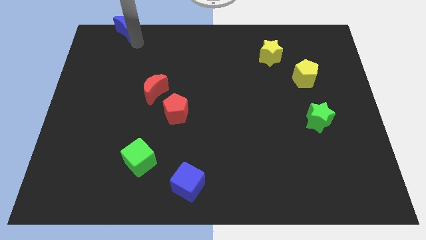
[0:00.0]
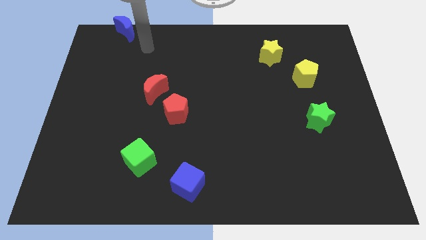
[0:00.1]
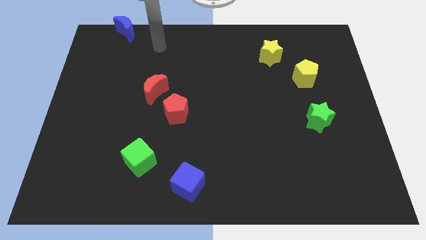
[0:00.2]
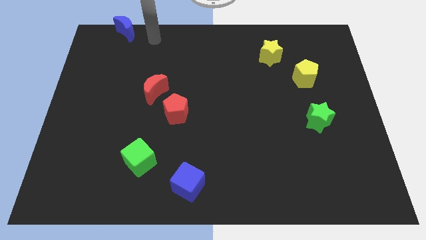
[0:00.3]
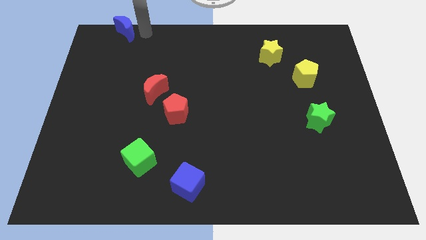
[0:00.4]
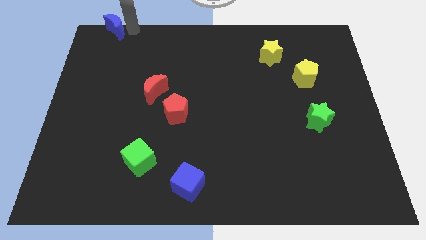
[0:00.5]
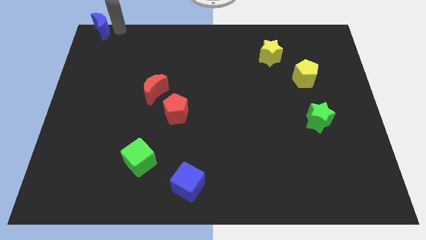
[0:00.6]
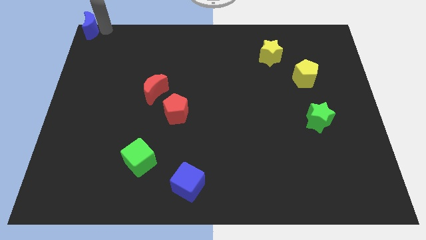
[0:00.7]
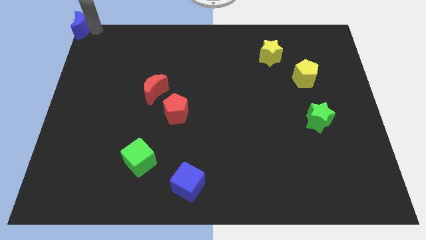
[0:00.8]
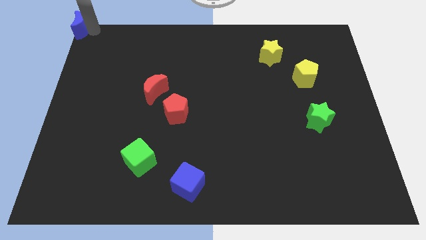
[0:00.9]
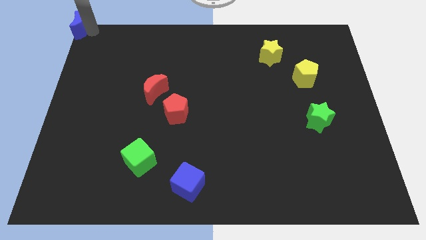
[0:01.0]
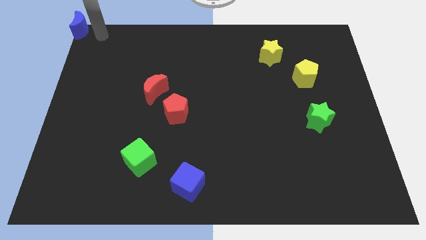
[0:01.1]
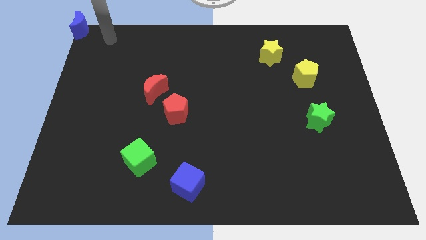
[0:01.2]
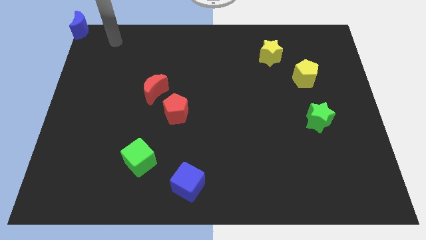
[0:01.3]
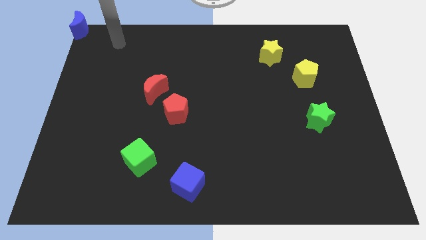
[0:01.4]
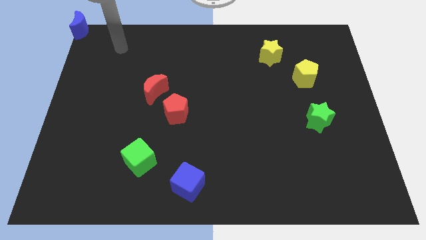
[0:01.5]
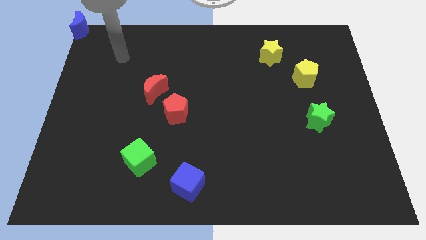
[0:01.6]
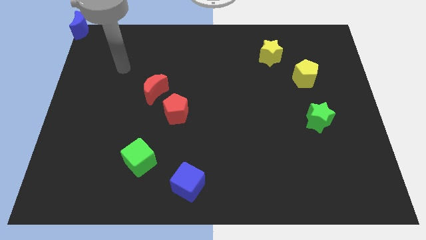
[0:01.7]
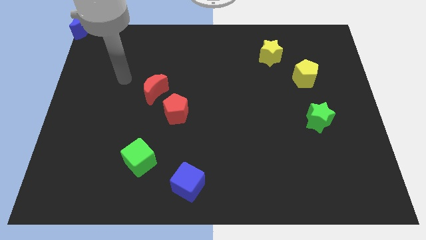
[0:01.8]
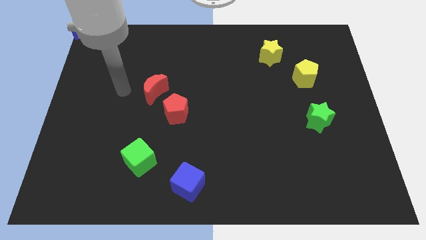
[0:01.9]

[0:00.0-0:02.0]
place blue moon to the top left corner of the board

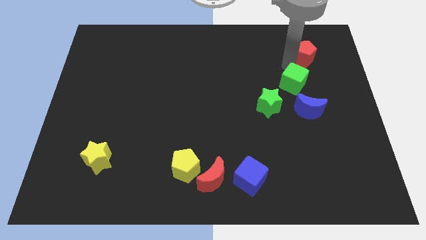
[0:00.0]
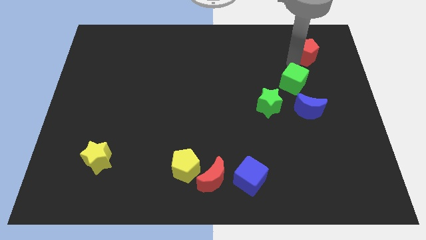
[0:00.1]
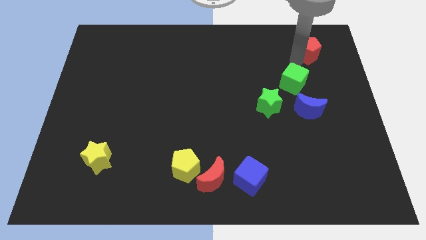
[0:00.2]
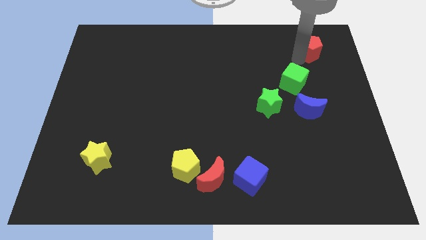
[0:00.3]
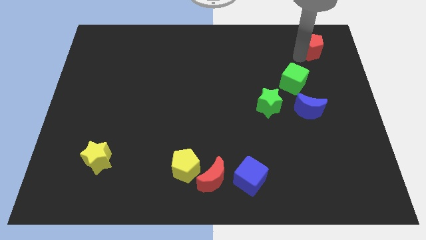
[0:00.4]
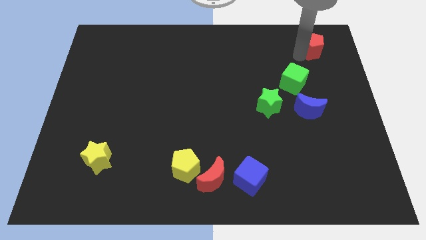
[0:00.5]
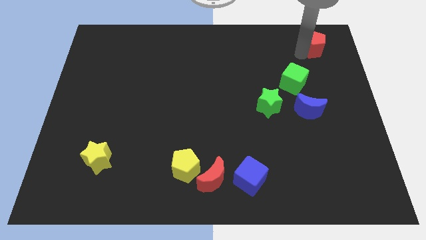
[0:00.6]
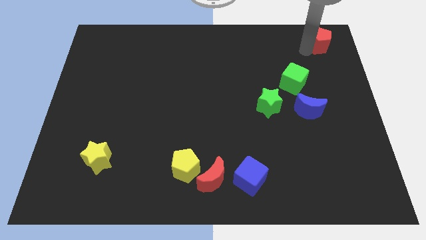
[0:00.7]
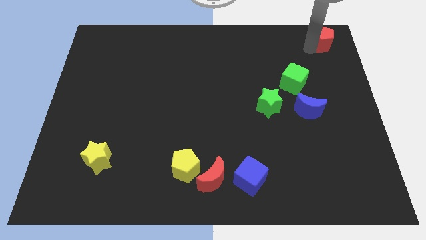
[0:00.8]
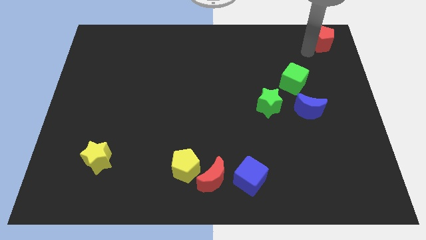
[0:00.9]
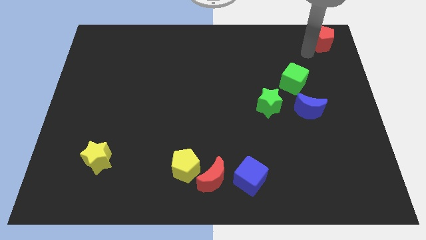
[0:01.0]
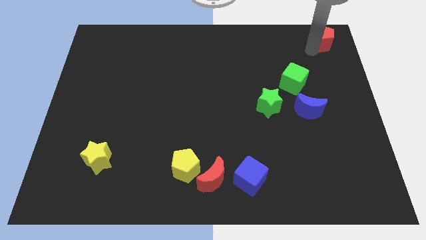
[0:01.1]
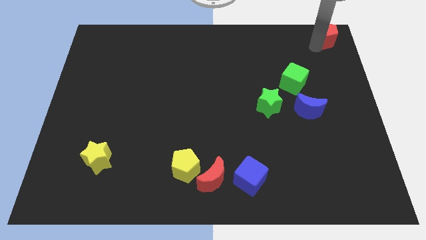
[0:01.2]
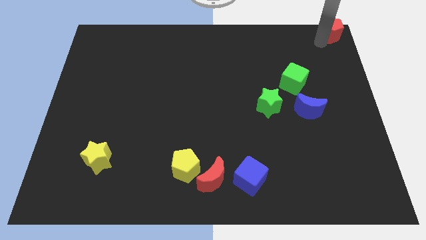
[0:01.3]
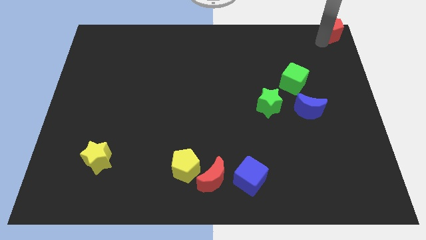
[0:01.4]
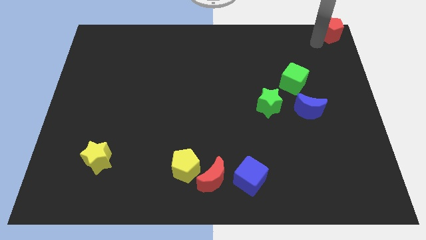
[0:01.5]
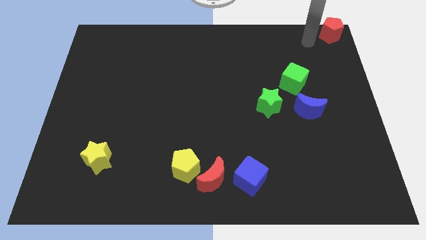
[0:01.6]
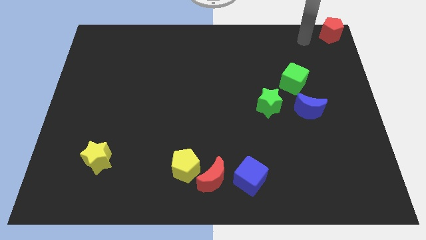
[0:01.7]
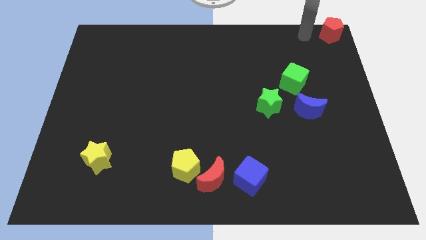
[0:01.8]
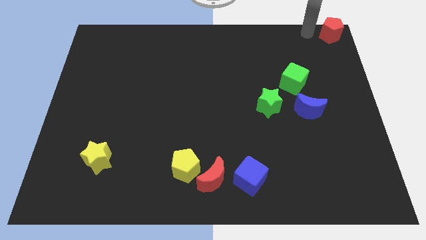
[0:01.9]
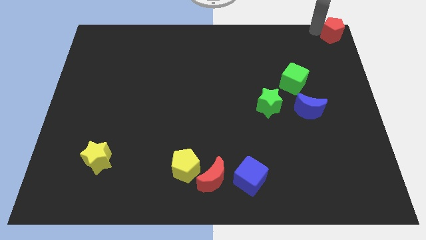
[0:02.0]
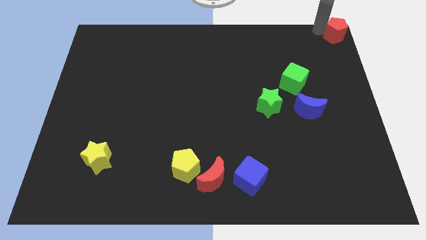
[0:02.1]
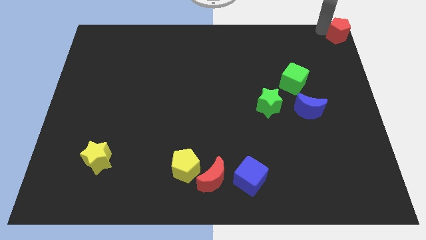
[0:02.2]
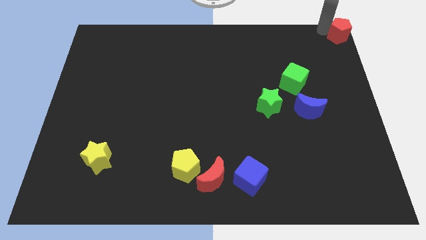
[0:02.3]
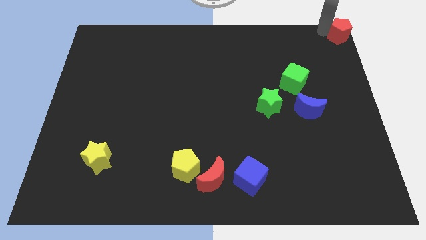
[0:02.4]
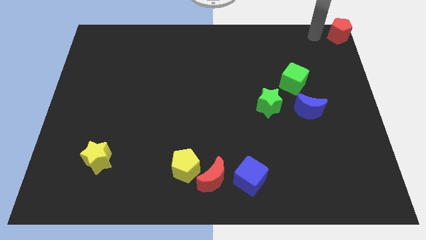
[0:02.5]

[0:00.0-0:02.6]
push the red pentagon to the top right corner

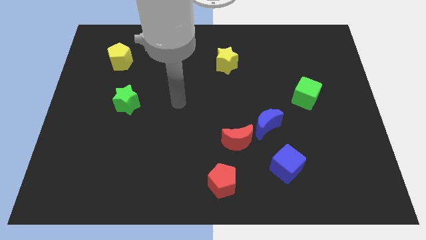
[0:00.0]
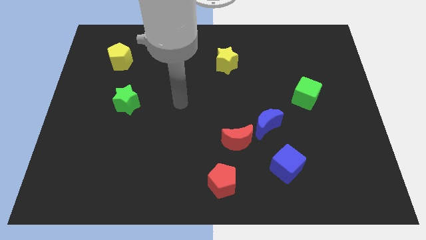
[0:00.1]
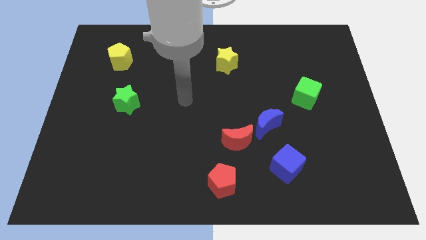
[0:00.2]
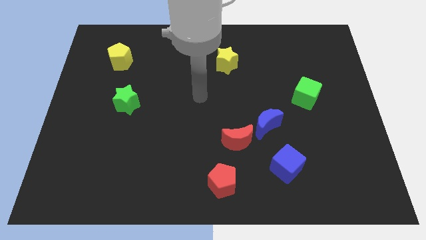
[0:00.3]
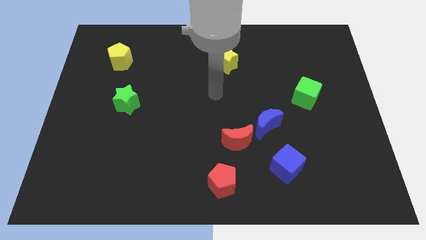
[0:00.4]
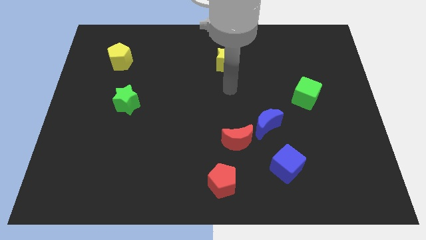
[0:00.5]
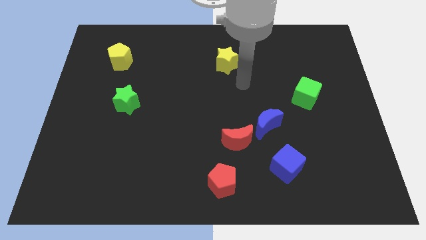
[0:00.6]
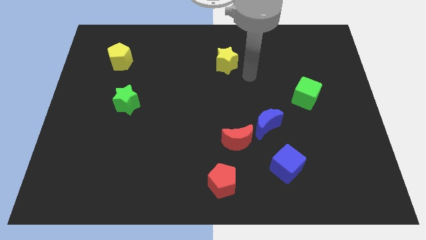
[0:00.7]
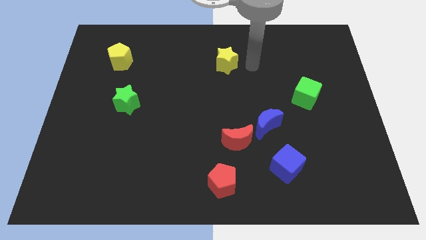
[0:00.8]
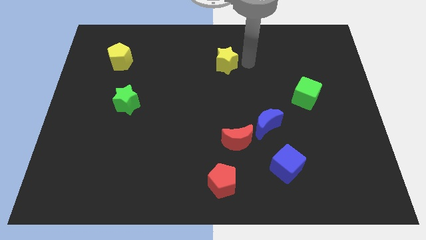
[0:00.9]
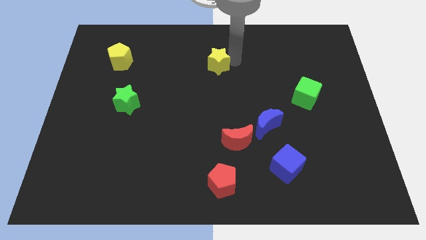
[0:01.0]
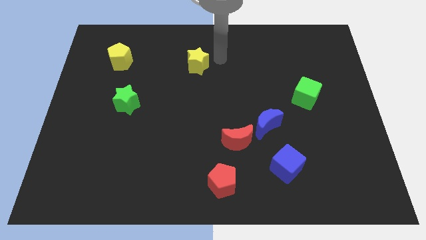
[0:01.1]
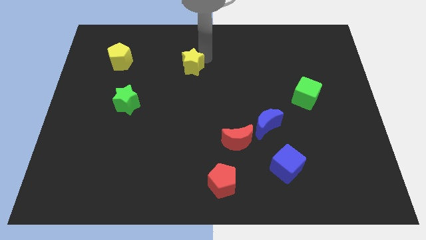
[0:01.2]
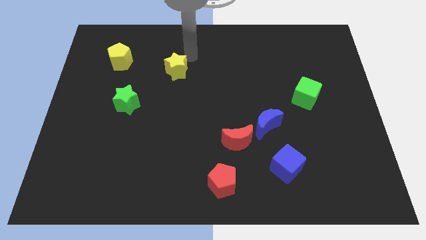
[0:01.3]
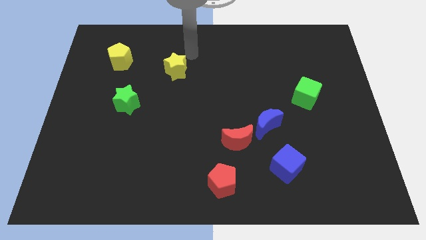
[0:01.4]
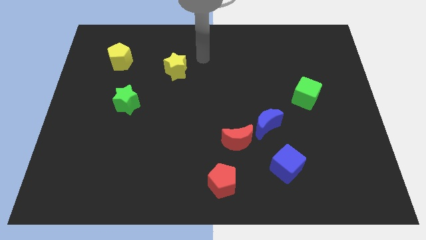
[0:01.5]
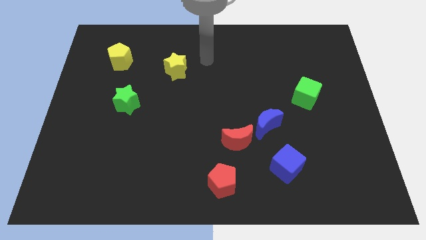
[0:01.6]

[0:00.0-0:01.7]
place the yellow star to the bottom right of yellow pentagon

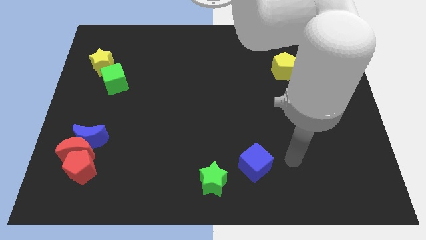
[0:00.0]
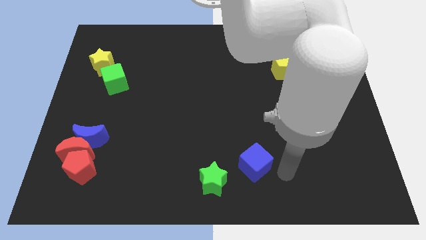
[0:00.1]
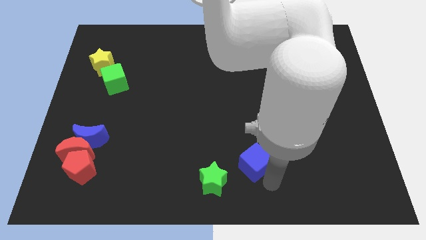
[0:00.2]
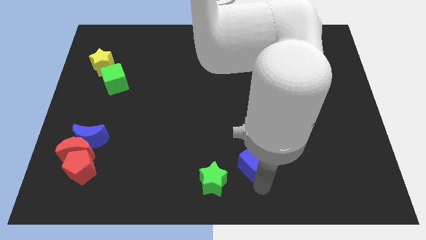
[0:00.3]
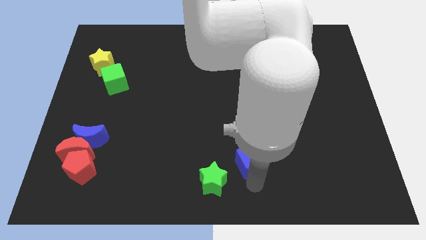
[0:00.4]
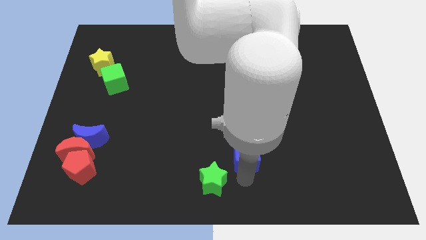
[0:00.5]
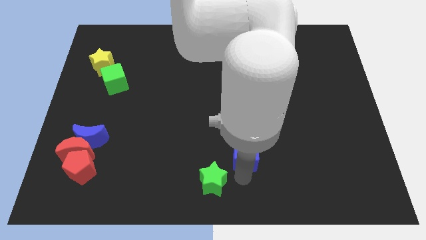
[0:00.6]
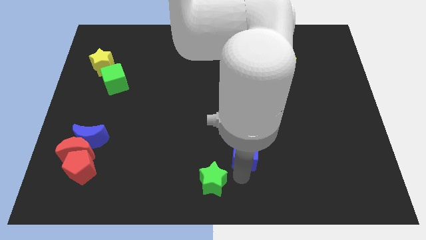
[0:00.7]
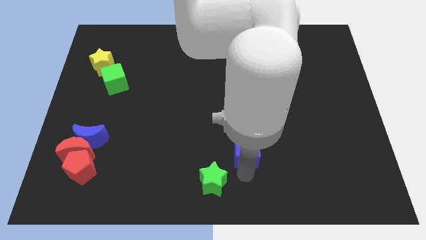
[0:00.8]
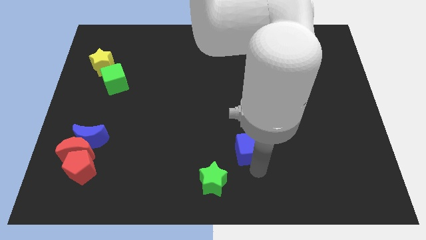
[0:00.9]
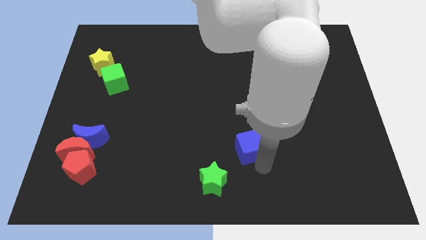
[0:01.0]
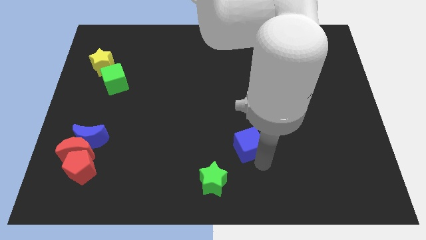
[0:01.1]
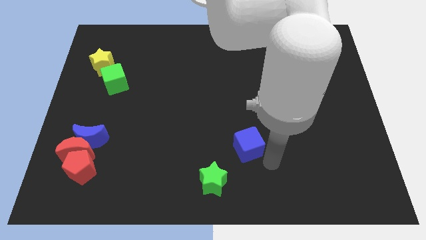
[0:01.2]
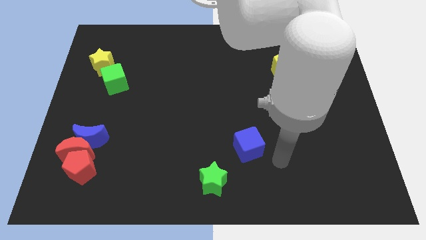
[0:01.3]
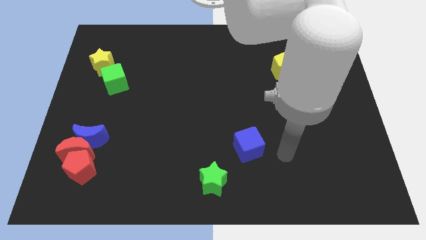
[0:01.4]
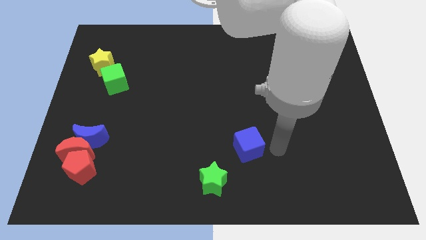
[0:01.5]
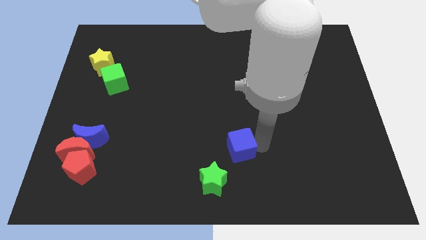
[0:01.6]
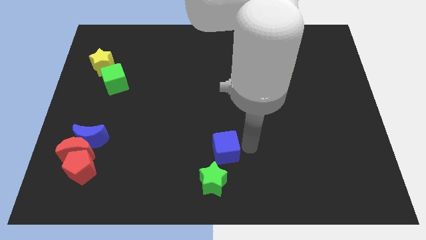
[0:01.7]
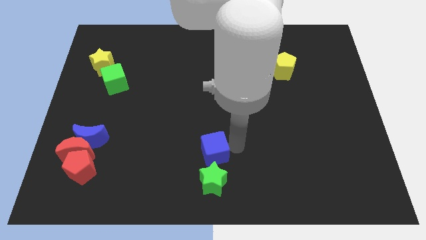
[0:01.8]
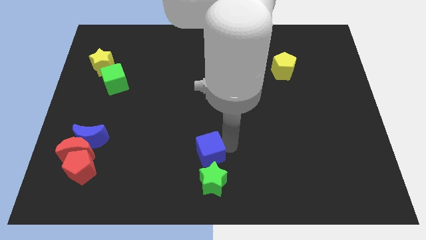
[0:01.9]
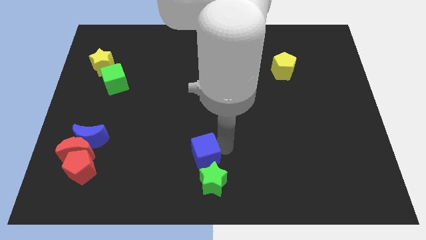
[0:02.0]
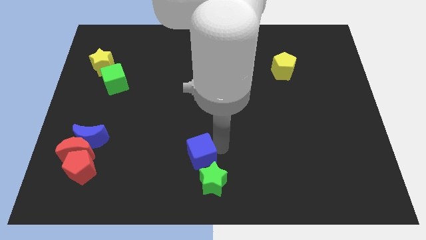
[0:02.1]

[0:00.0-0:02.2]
place the blue cube towards the top side of the green star

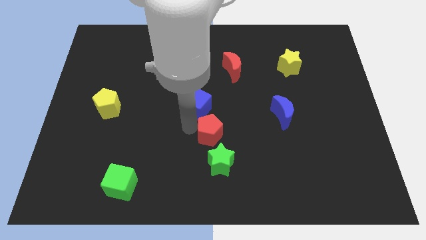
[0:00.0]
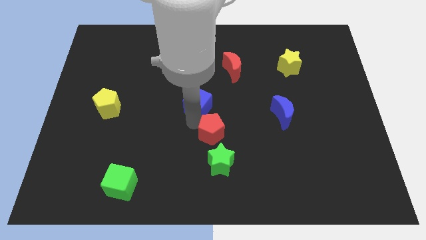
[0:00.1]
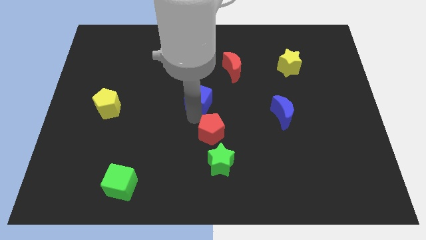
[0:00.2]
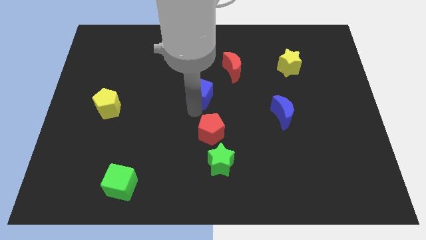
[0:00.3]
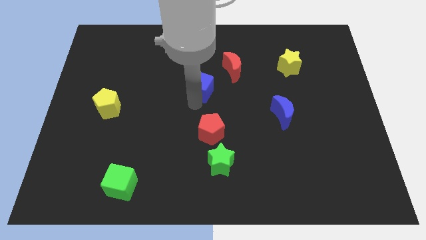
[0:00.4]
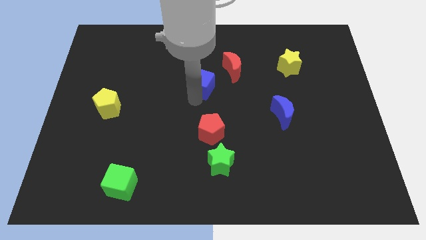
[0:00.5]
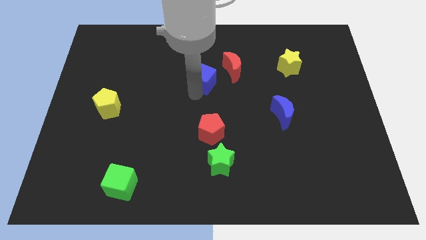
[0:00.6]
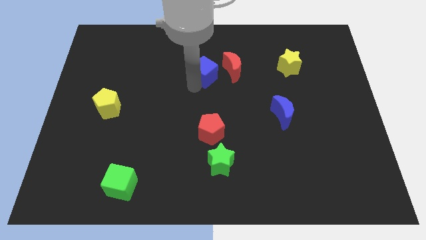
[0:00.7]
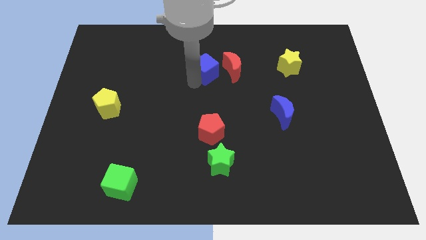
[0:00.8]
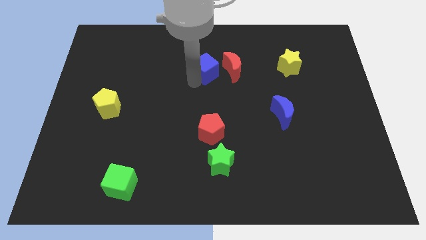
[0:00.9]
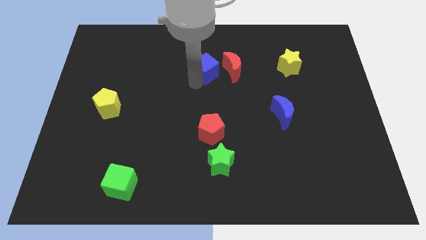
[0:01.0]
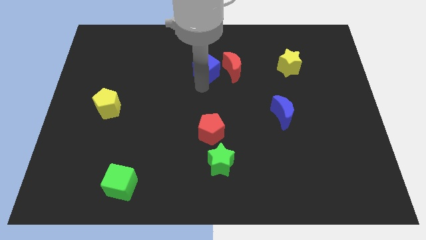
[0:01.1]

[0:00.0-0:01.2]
move blue cube left of red crescent
